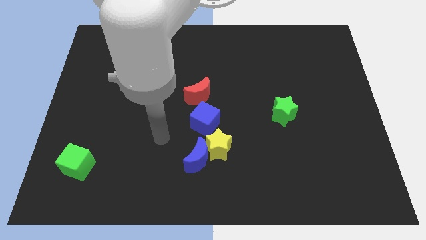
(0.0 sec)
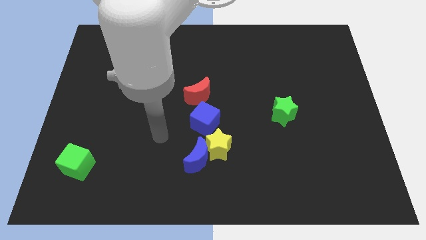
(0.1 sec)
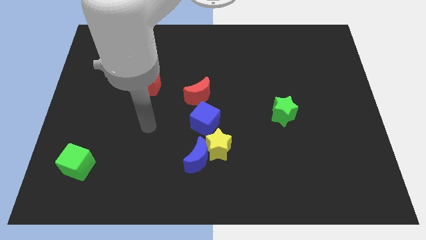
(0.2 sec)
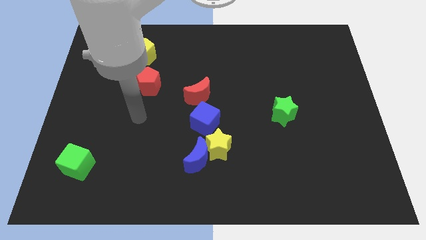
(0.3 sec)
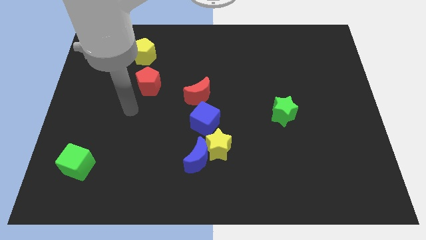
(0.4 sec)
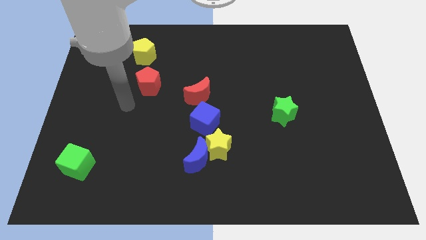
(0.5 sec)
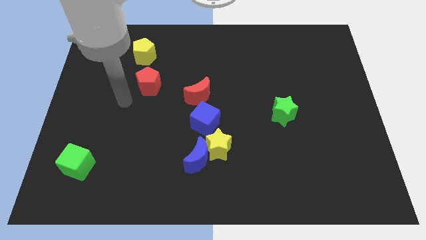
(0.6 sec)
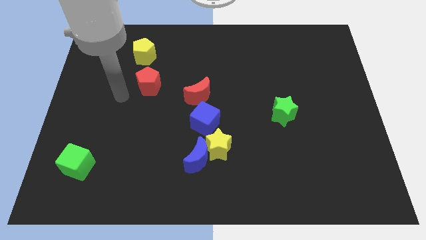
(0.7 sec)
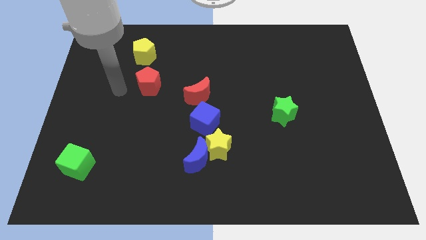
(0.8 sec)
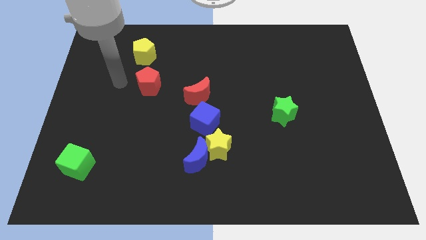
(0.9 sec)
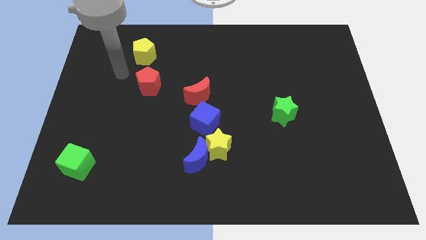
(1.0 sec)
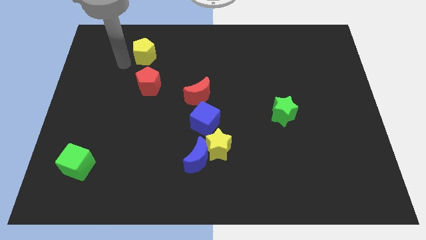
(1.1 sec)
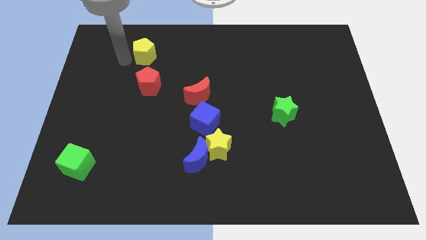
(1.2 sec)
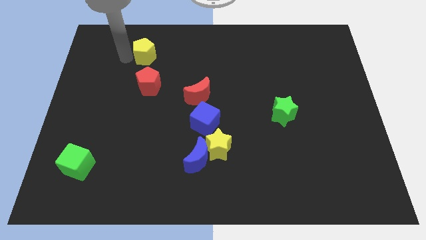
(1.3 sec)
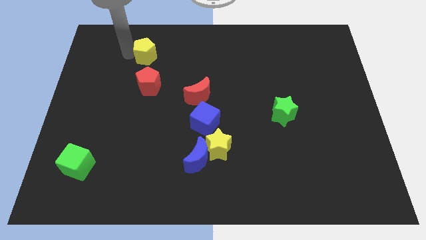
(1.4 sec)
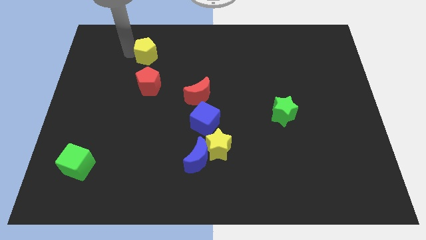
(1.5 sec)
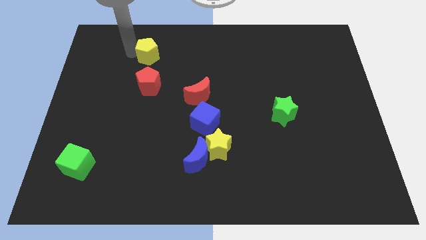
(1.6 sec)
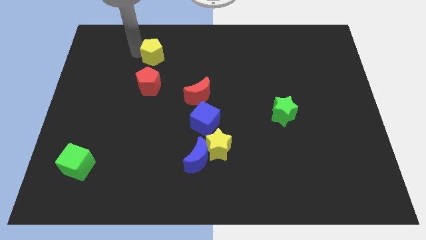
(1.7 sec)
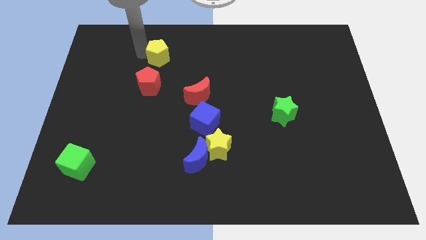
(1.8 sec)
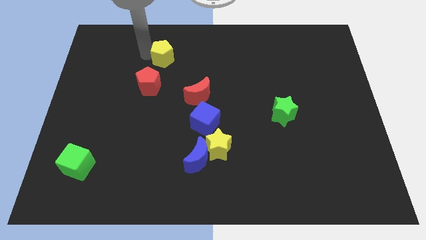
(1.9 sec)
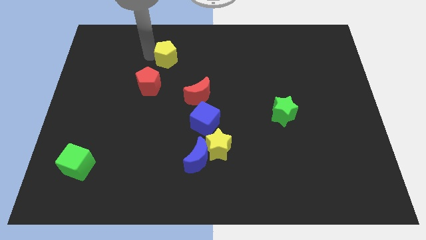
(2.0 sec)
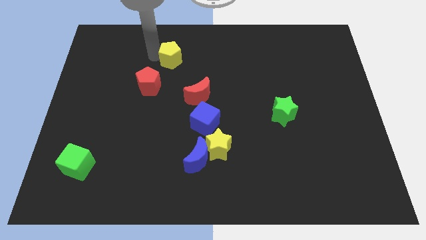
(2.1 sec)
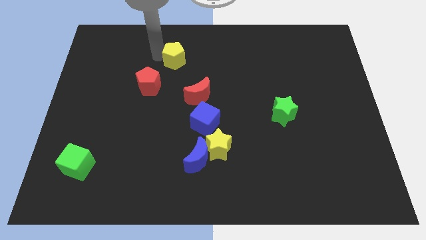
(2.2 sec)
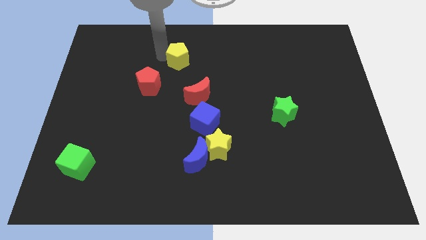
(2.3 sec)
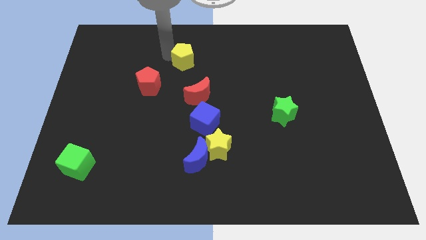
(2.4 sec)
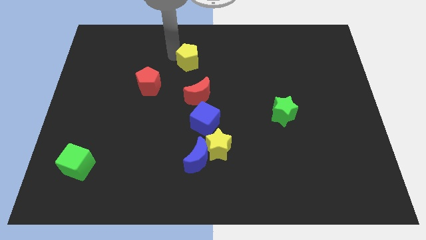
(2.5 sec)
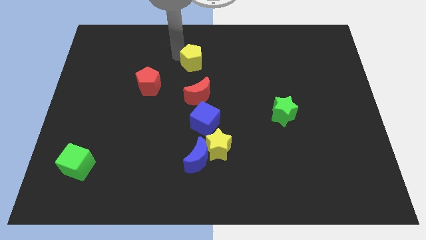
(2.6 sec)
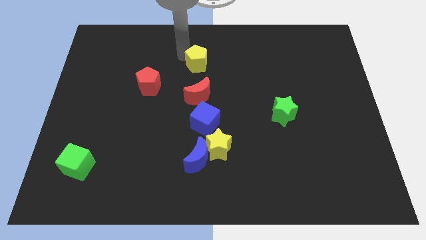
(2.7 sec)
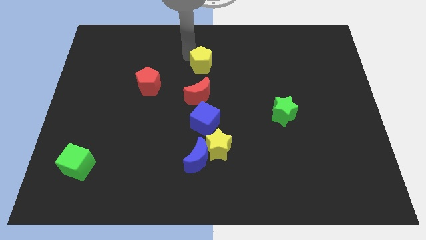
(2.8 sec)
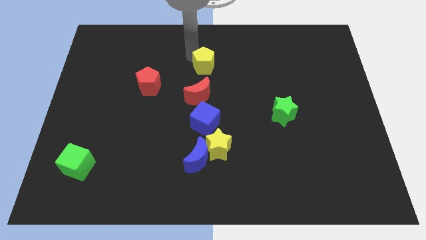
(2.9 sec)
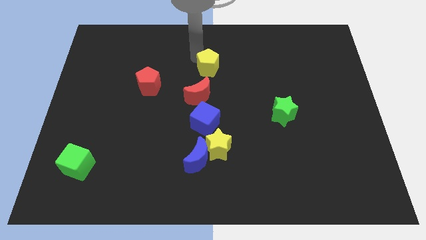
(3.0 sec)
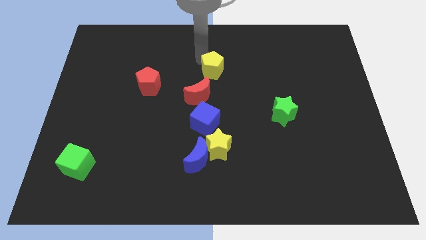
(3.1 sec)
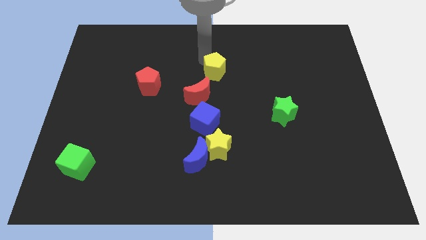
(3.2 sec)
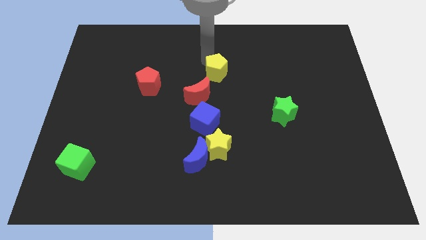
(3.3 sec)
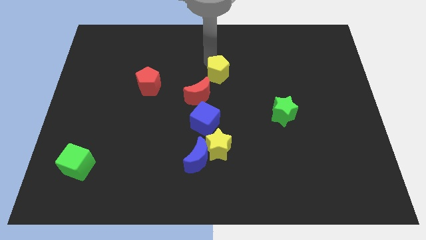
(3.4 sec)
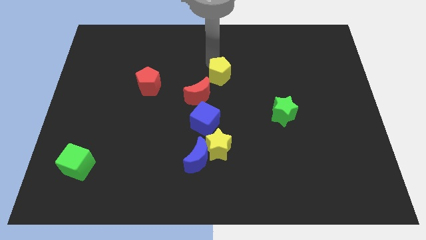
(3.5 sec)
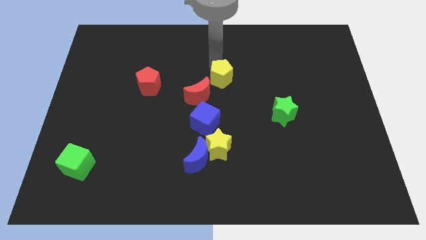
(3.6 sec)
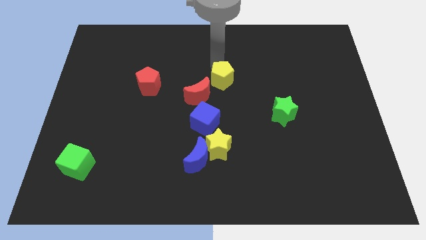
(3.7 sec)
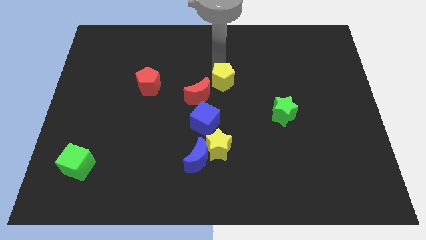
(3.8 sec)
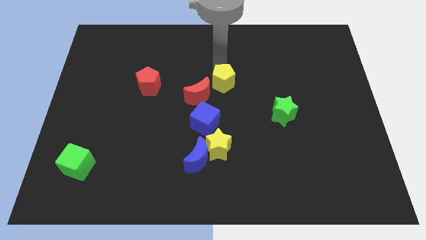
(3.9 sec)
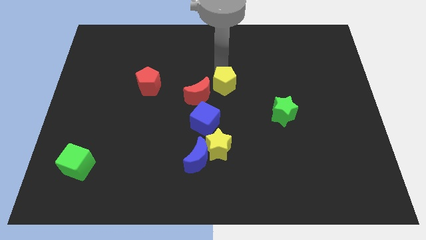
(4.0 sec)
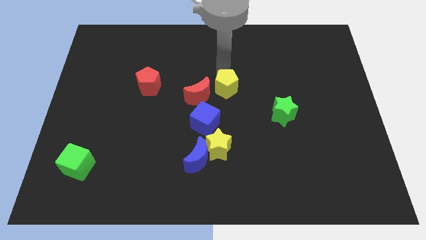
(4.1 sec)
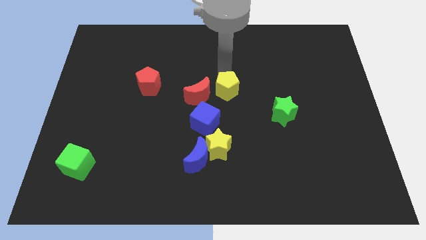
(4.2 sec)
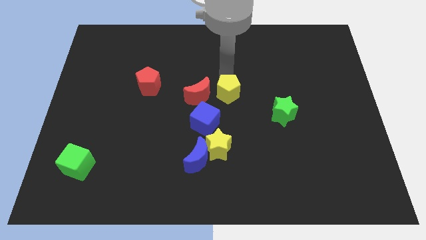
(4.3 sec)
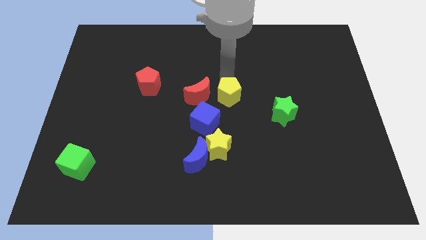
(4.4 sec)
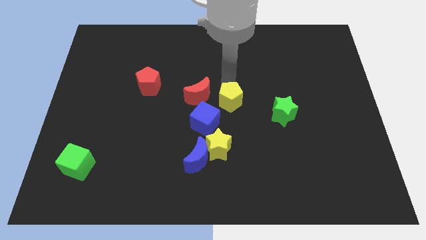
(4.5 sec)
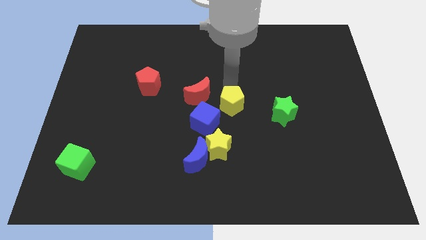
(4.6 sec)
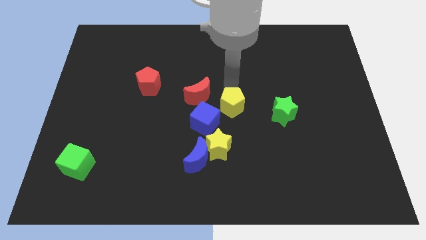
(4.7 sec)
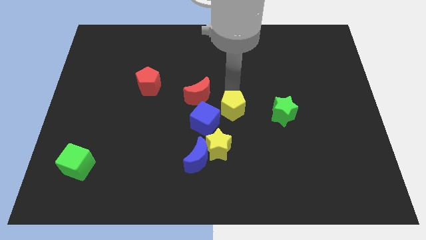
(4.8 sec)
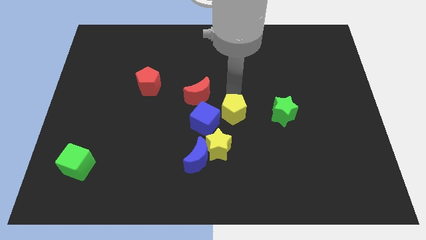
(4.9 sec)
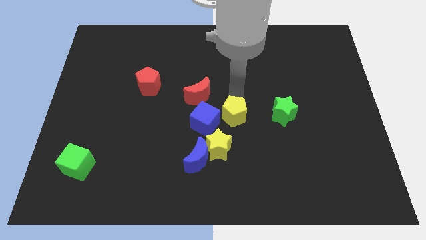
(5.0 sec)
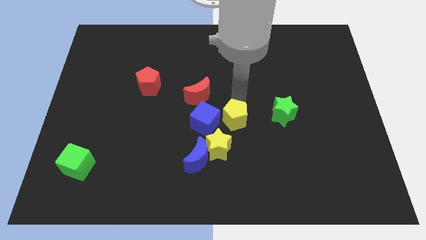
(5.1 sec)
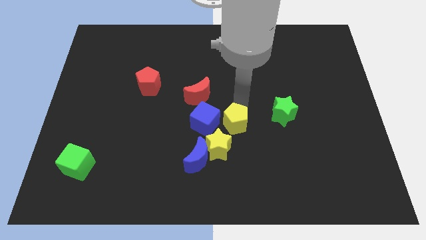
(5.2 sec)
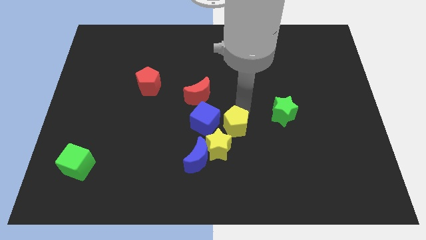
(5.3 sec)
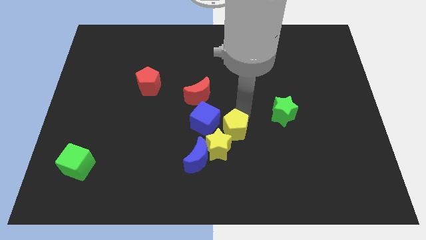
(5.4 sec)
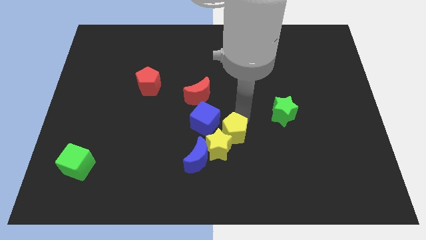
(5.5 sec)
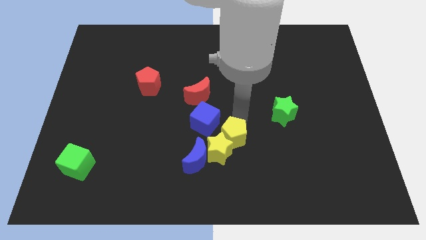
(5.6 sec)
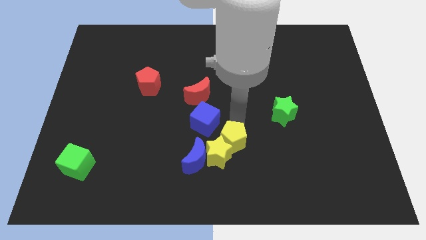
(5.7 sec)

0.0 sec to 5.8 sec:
push the yellow pentagon next to the yellow star

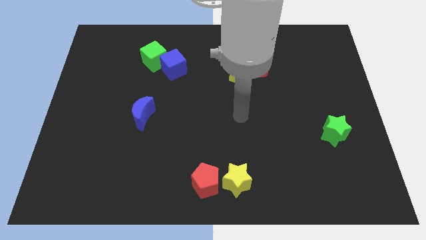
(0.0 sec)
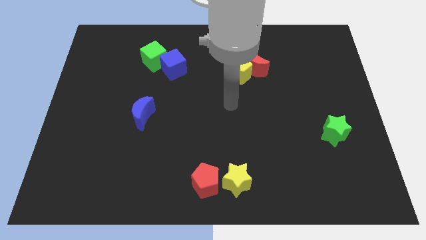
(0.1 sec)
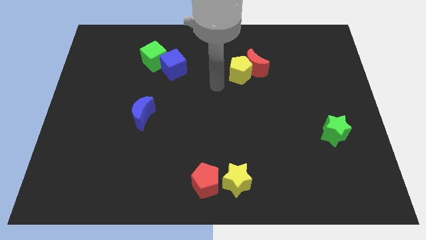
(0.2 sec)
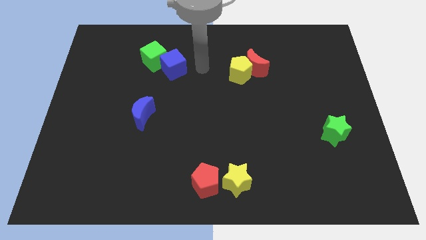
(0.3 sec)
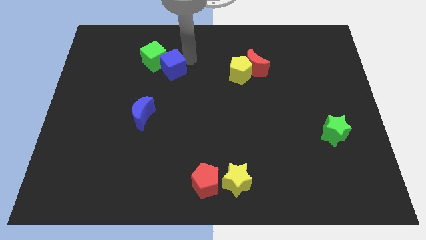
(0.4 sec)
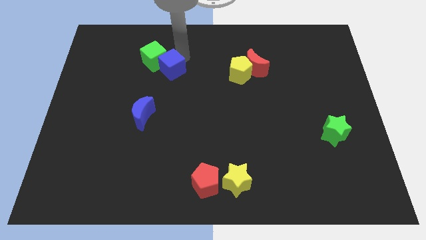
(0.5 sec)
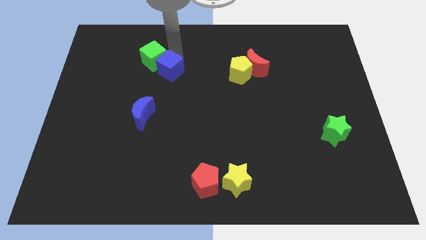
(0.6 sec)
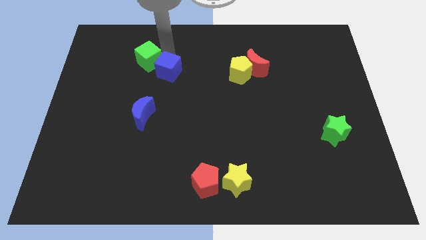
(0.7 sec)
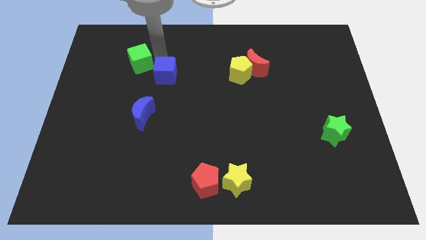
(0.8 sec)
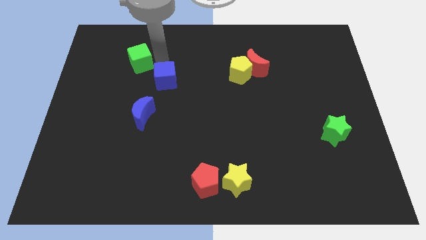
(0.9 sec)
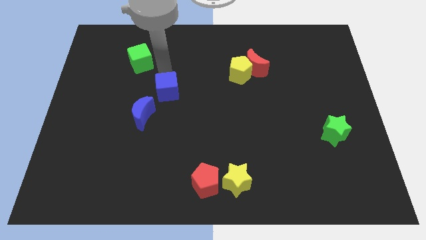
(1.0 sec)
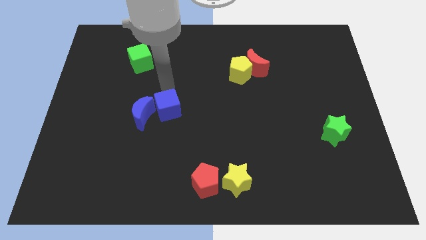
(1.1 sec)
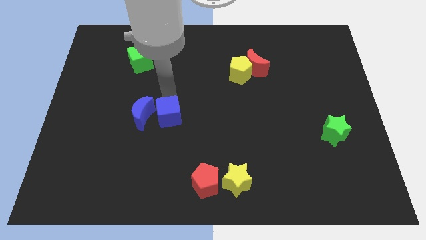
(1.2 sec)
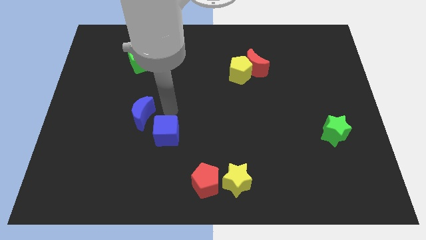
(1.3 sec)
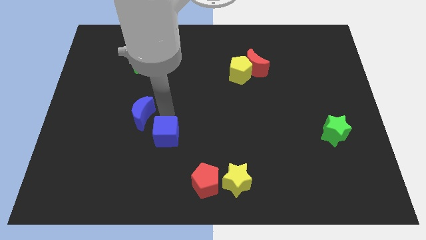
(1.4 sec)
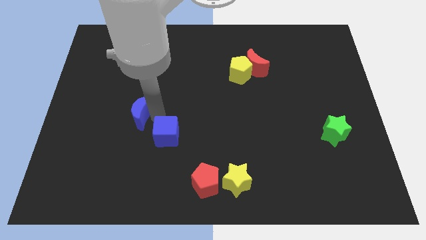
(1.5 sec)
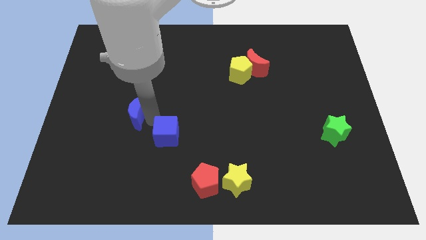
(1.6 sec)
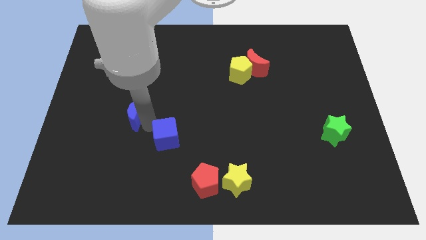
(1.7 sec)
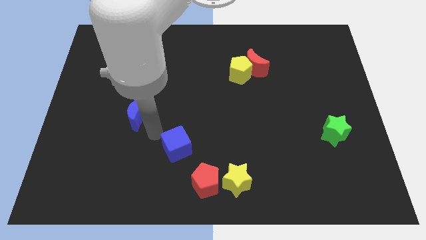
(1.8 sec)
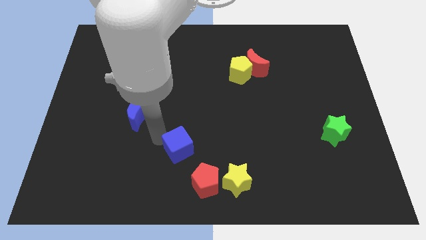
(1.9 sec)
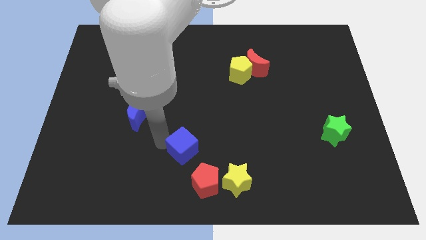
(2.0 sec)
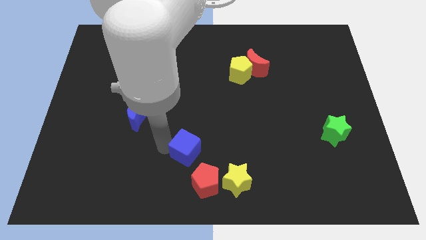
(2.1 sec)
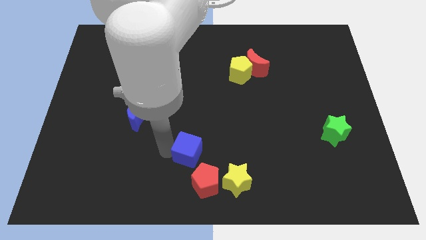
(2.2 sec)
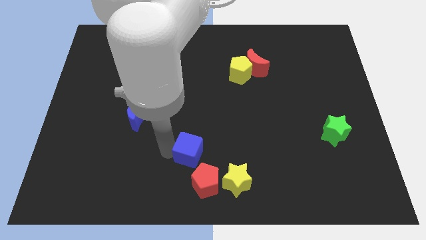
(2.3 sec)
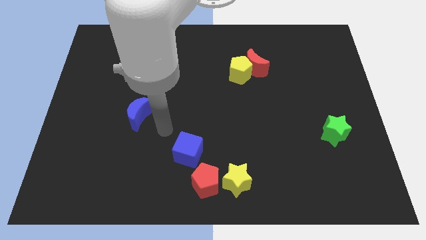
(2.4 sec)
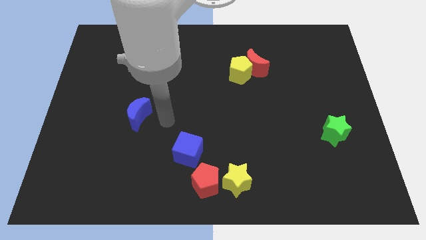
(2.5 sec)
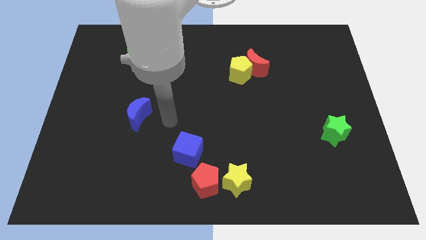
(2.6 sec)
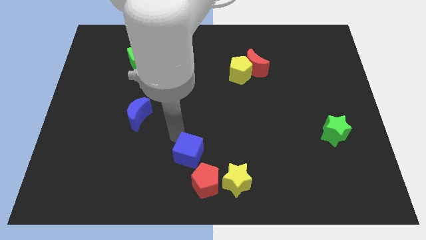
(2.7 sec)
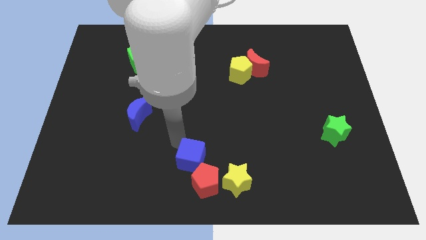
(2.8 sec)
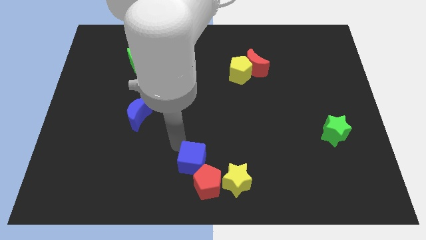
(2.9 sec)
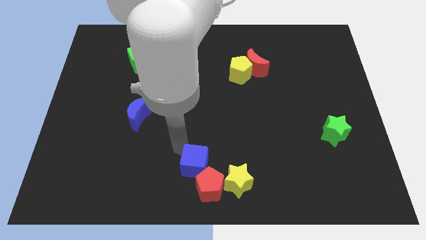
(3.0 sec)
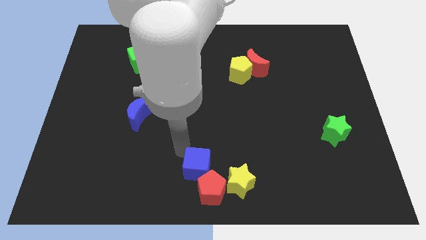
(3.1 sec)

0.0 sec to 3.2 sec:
move the blue cube next to the red pentagon
